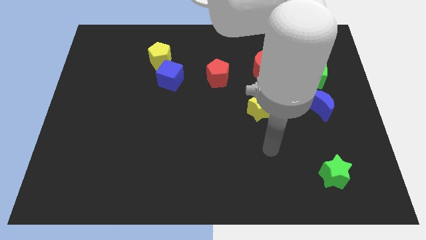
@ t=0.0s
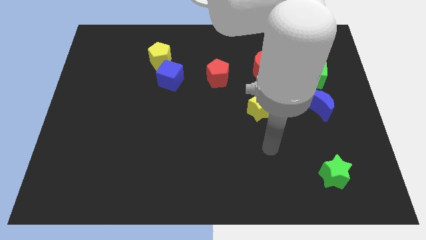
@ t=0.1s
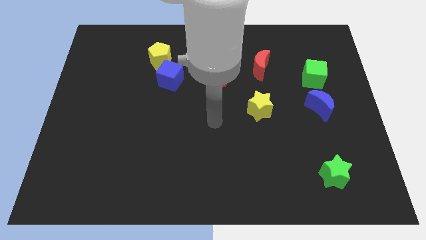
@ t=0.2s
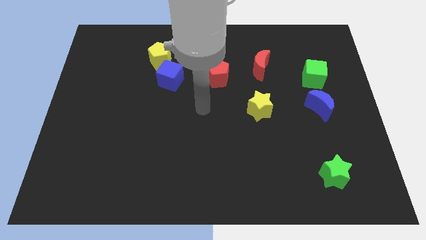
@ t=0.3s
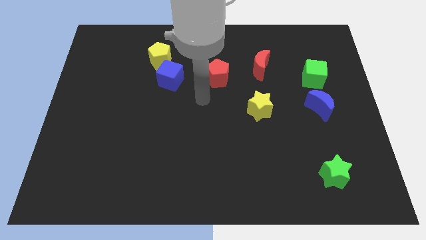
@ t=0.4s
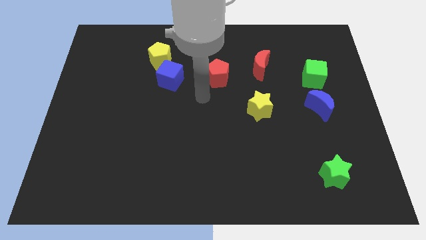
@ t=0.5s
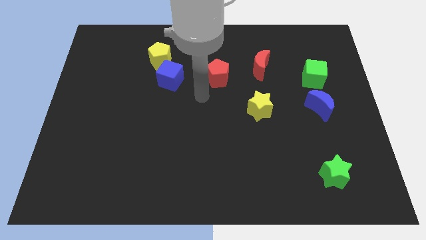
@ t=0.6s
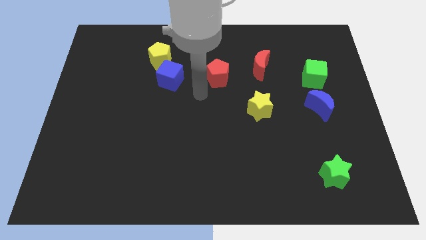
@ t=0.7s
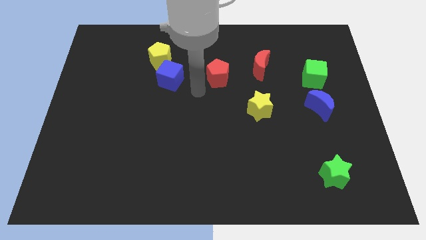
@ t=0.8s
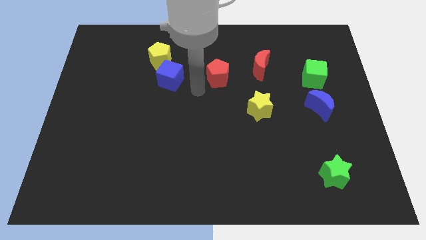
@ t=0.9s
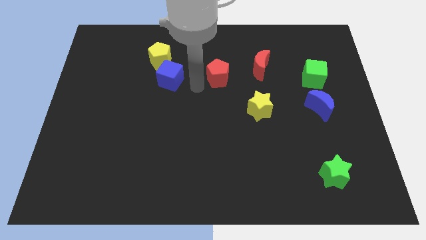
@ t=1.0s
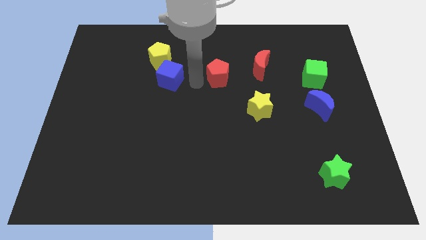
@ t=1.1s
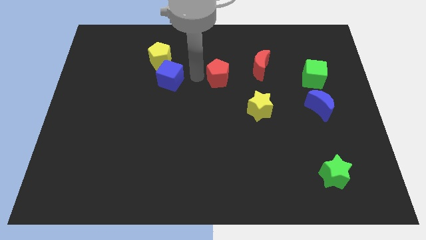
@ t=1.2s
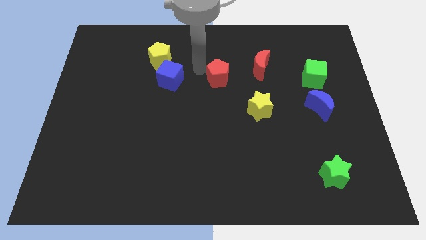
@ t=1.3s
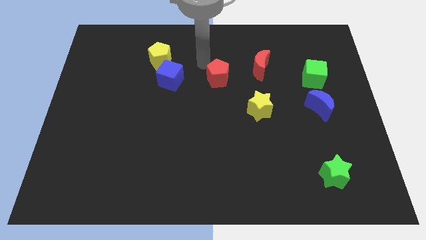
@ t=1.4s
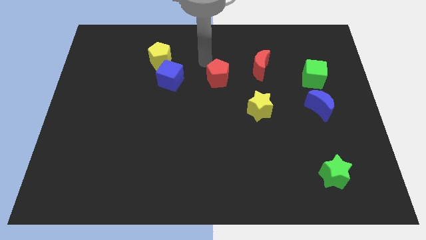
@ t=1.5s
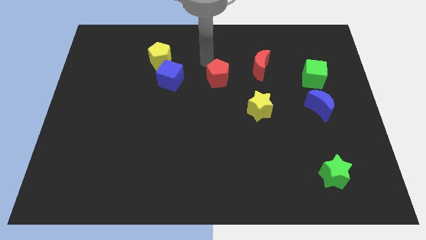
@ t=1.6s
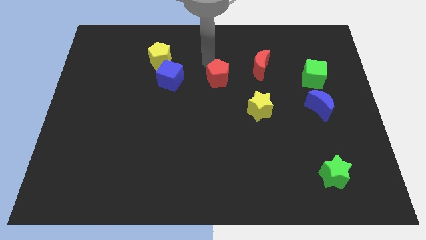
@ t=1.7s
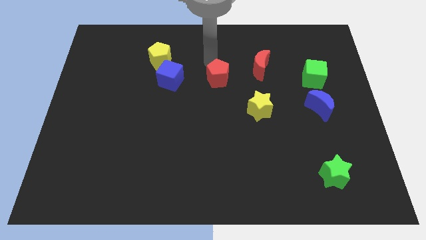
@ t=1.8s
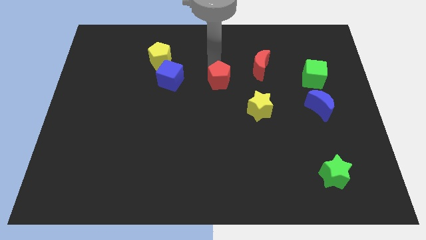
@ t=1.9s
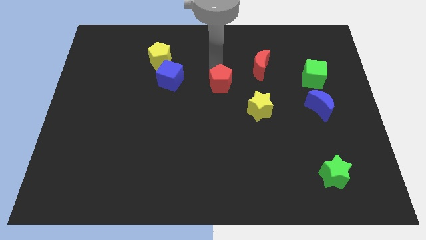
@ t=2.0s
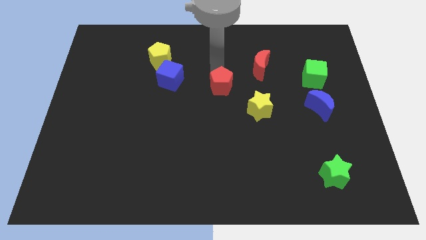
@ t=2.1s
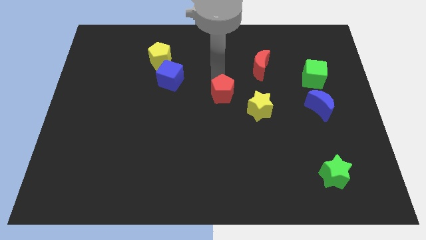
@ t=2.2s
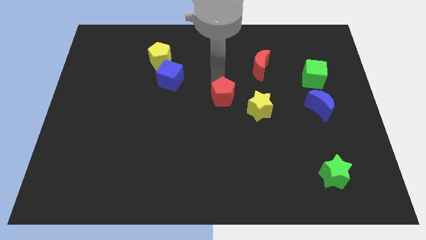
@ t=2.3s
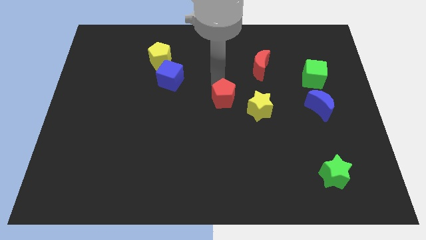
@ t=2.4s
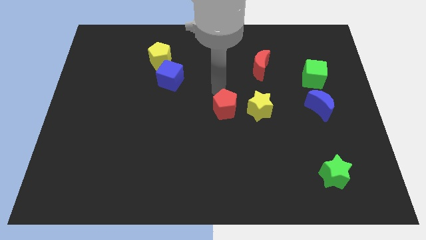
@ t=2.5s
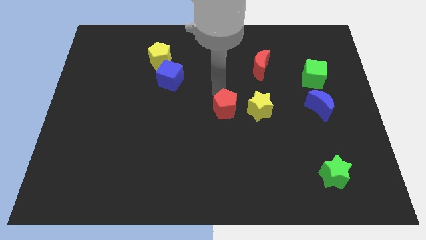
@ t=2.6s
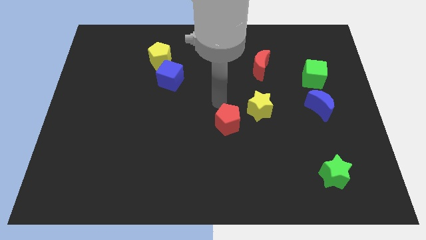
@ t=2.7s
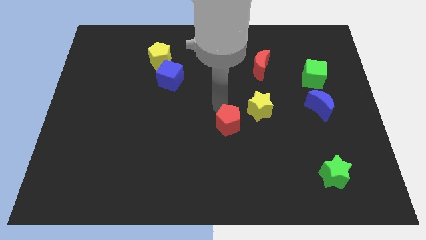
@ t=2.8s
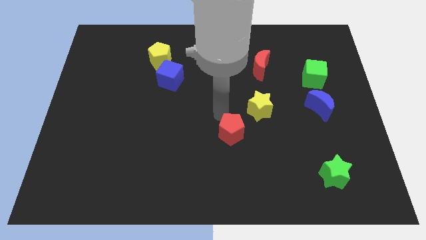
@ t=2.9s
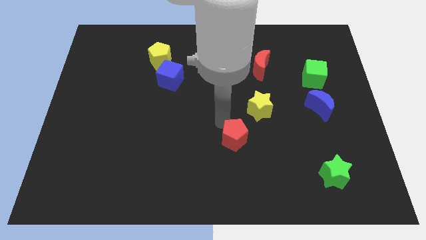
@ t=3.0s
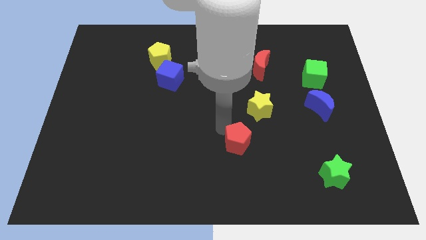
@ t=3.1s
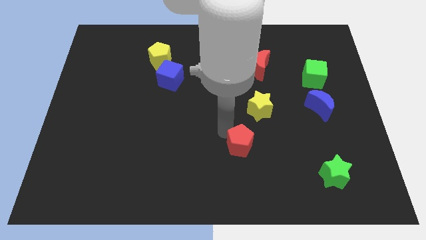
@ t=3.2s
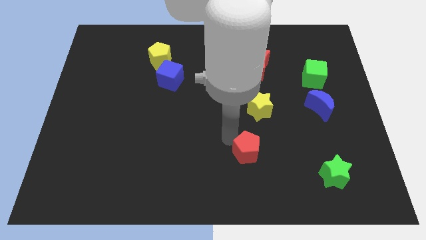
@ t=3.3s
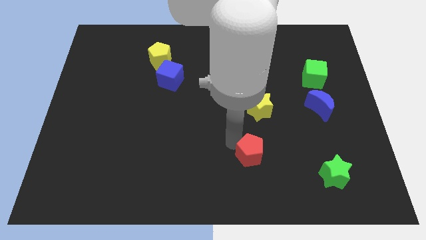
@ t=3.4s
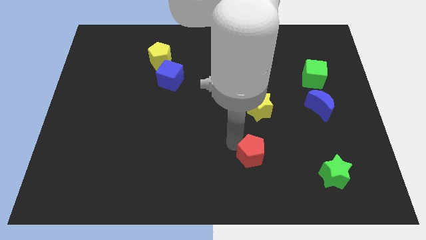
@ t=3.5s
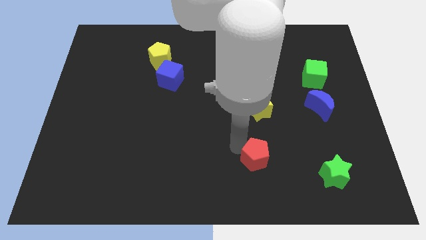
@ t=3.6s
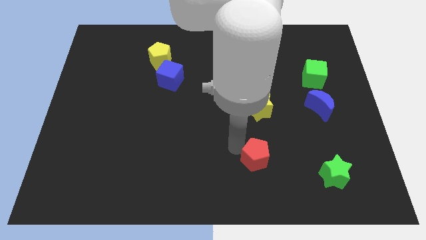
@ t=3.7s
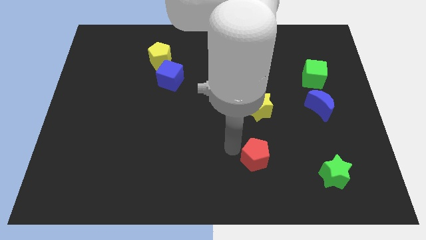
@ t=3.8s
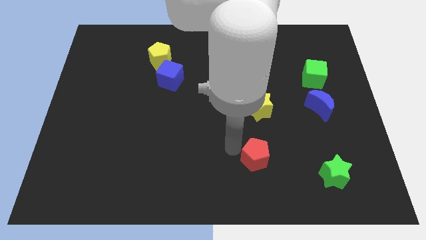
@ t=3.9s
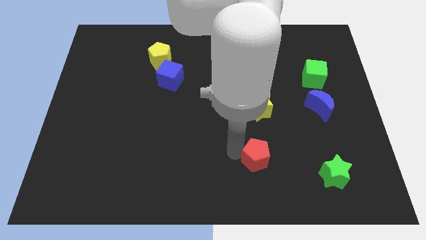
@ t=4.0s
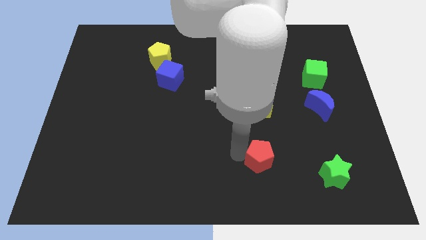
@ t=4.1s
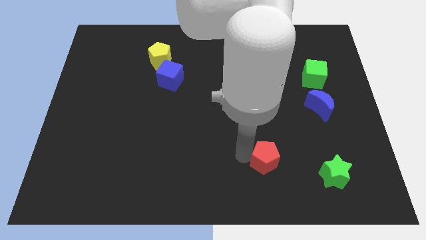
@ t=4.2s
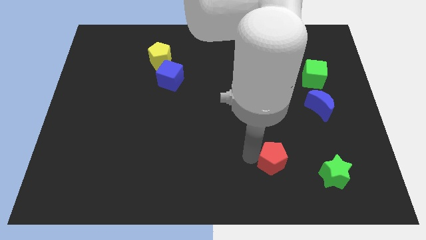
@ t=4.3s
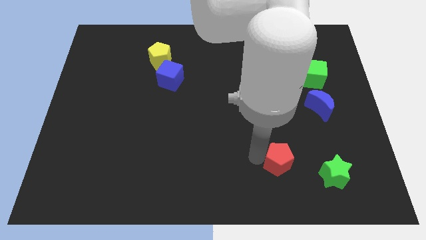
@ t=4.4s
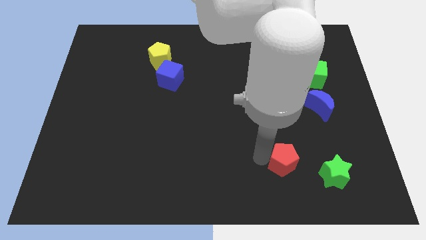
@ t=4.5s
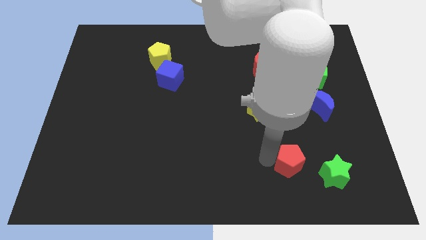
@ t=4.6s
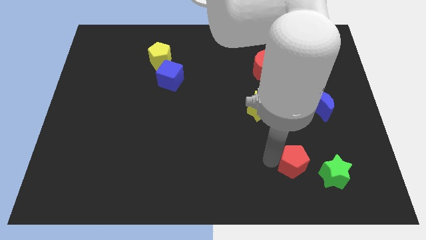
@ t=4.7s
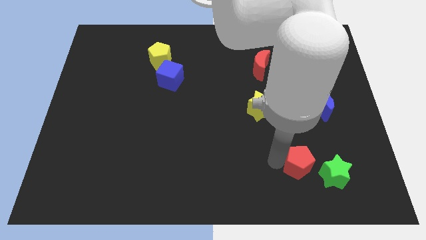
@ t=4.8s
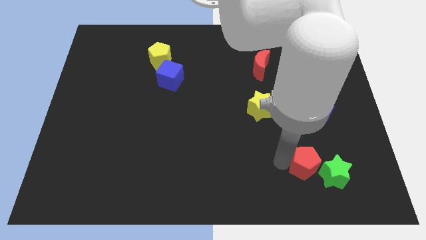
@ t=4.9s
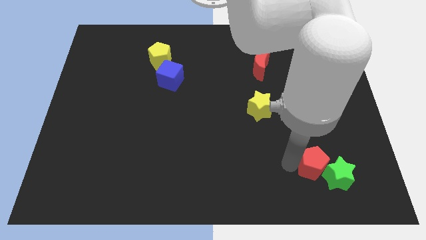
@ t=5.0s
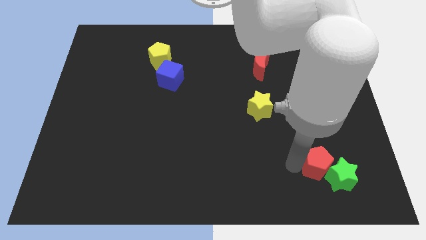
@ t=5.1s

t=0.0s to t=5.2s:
put the red pentagon to the green star

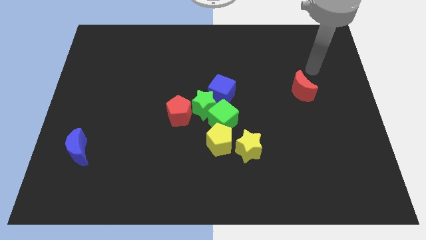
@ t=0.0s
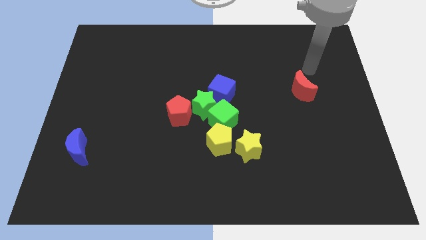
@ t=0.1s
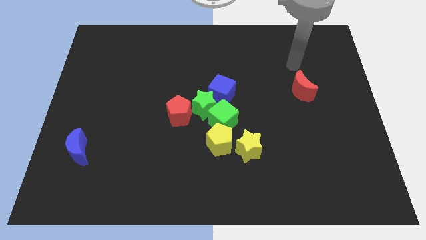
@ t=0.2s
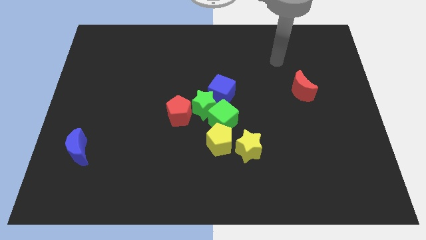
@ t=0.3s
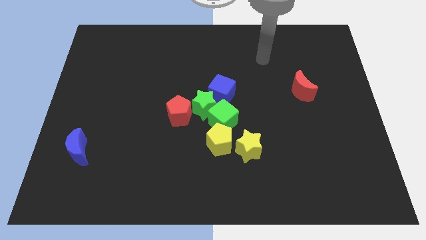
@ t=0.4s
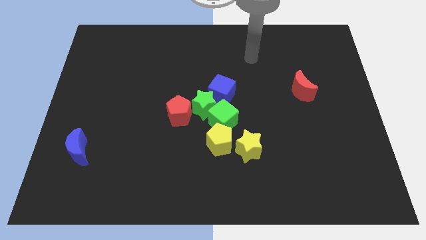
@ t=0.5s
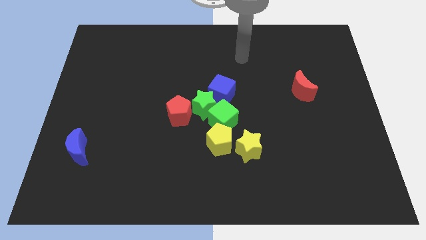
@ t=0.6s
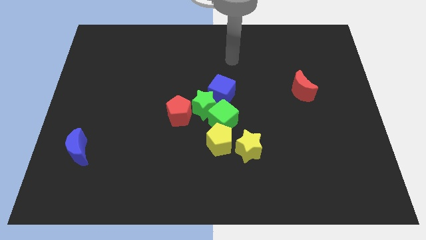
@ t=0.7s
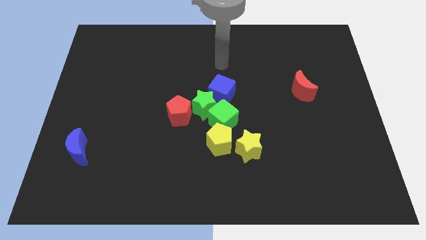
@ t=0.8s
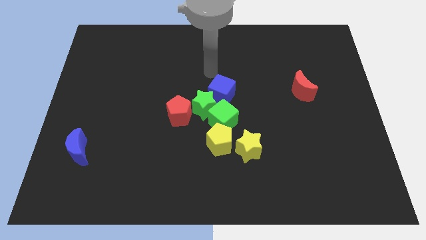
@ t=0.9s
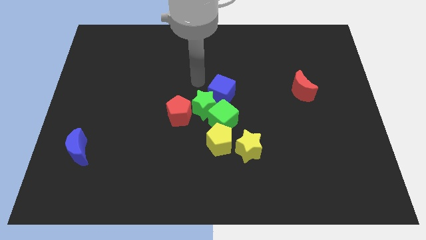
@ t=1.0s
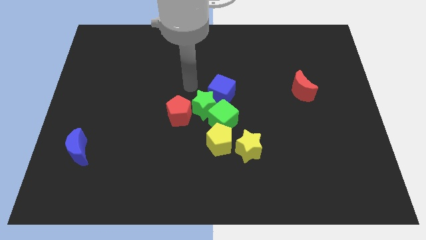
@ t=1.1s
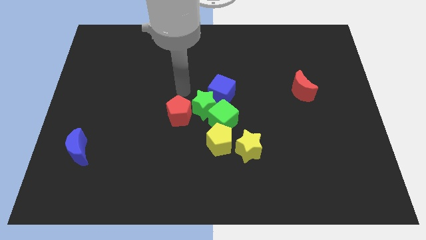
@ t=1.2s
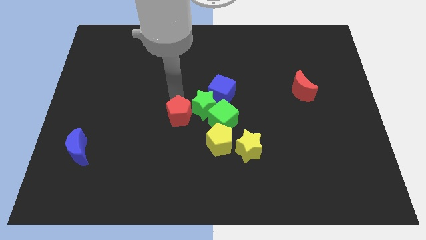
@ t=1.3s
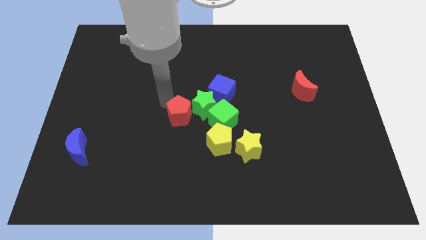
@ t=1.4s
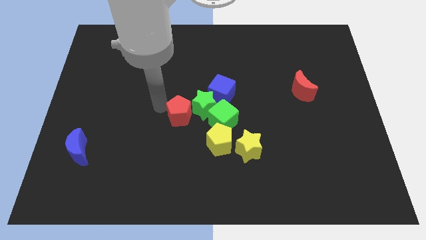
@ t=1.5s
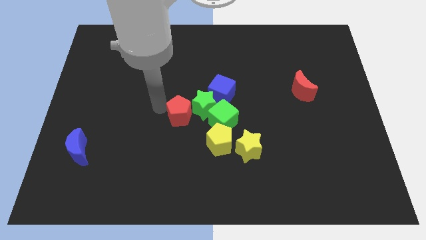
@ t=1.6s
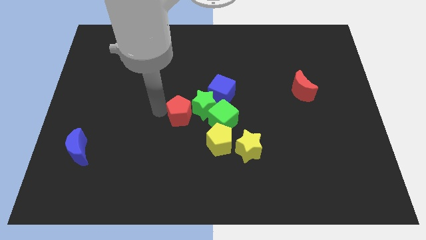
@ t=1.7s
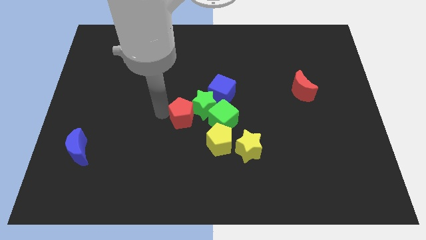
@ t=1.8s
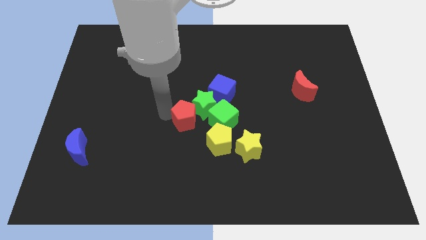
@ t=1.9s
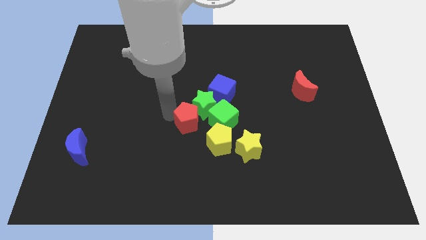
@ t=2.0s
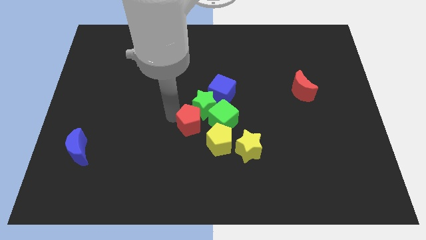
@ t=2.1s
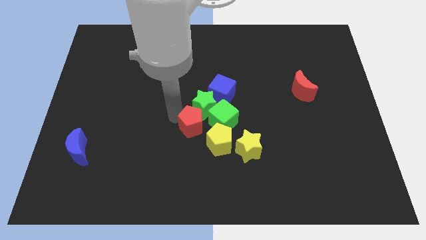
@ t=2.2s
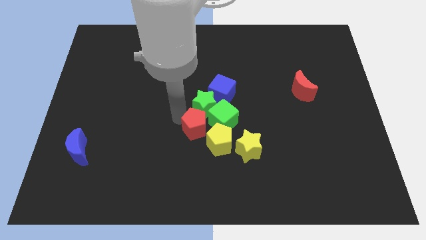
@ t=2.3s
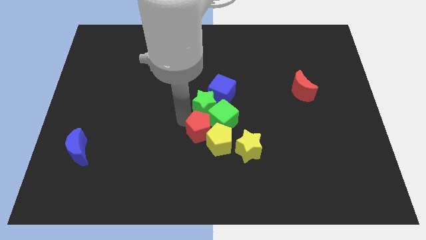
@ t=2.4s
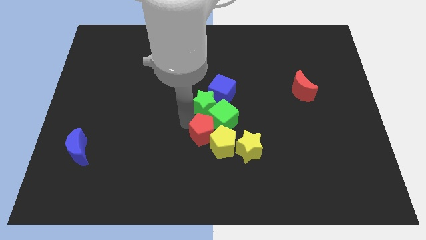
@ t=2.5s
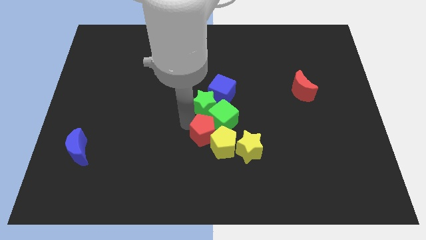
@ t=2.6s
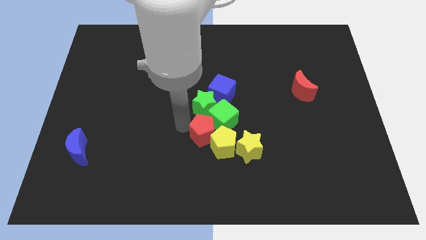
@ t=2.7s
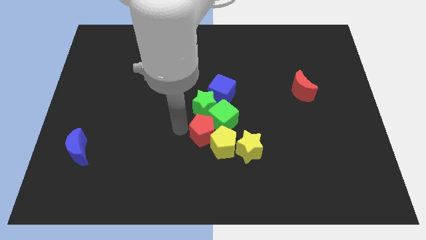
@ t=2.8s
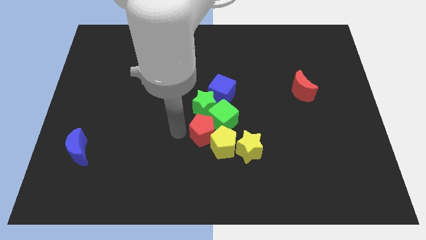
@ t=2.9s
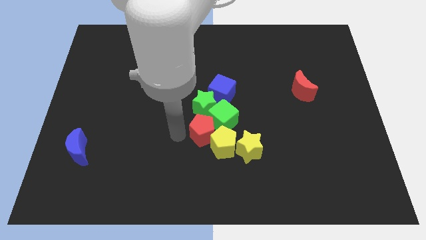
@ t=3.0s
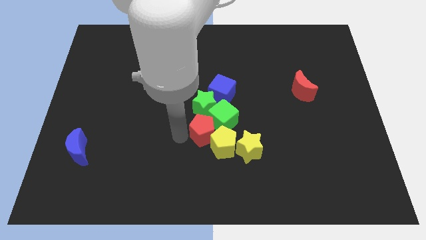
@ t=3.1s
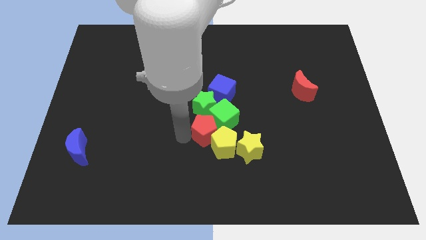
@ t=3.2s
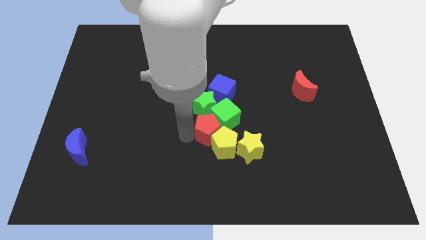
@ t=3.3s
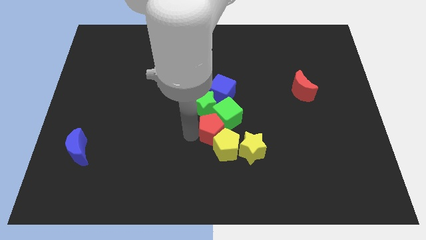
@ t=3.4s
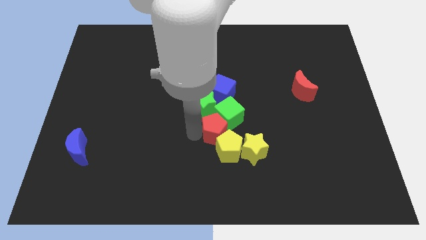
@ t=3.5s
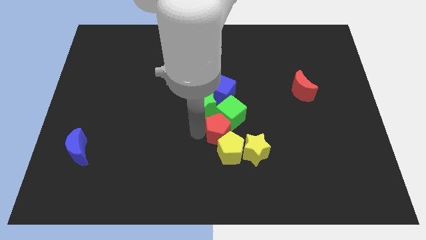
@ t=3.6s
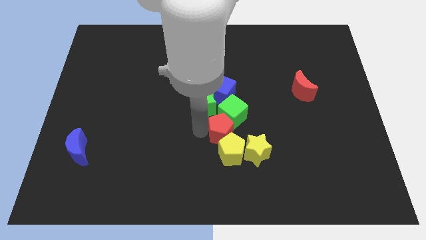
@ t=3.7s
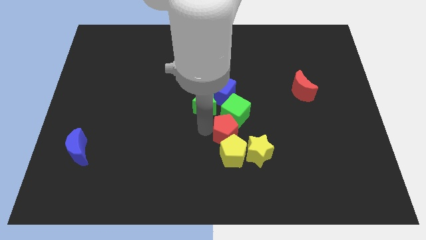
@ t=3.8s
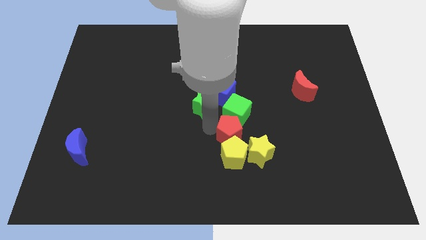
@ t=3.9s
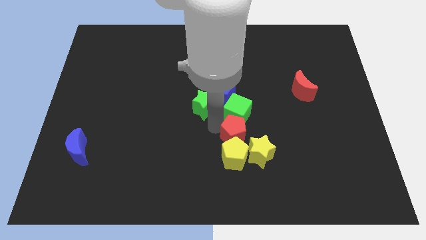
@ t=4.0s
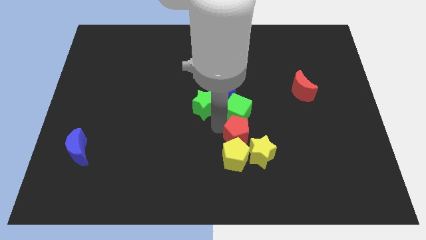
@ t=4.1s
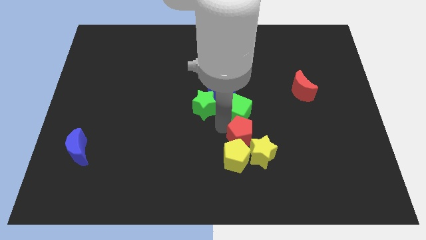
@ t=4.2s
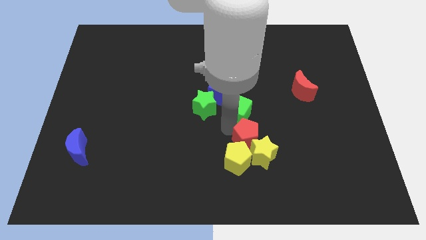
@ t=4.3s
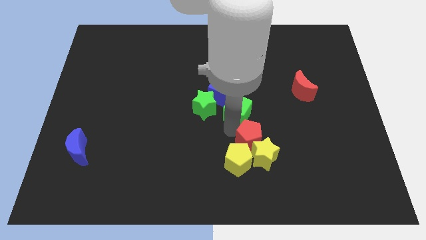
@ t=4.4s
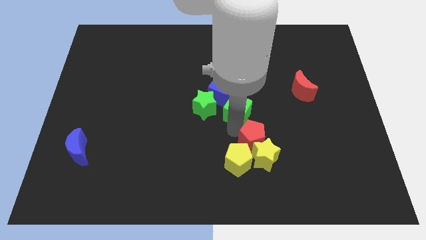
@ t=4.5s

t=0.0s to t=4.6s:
push the red pentagon to the yellow star
